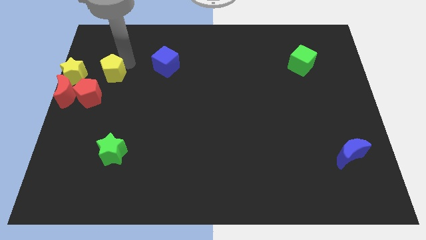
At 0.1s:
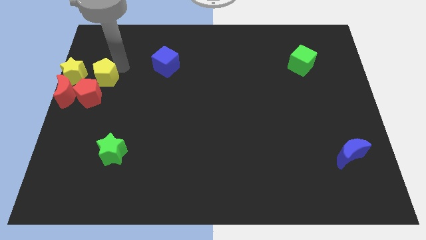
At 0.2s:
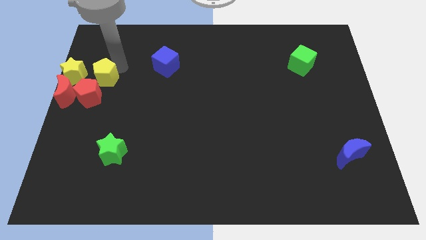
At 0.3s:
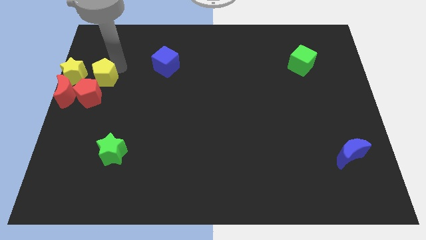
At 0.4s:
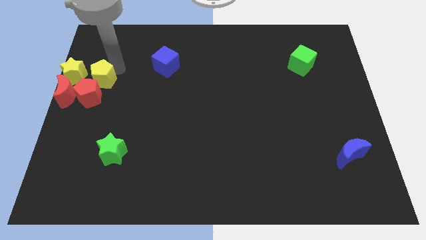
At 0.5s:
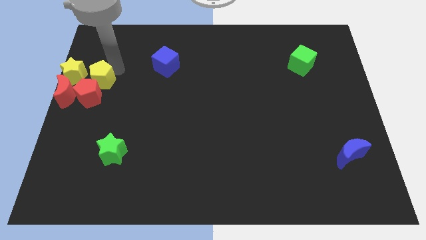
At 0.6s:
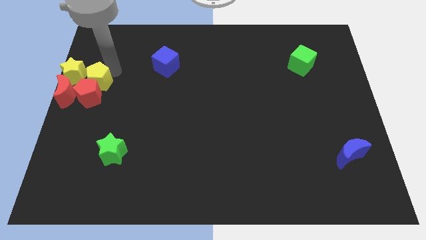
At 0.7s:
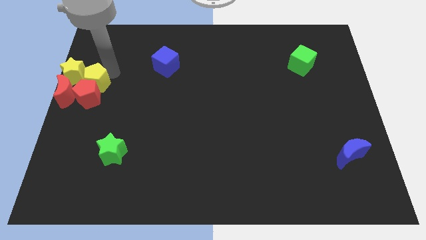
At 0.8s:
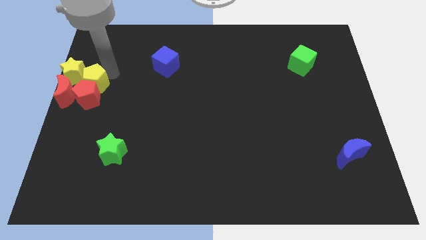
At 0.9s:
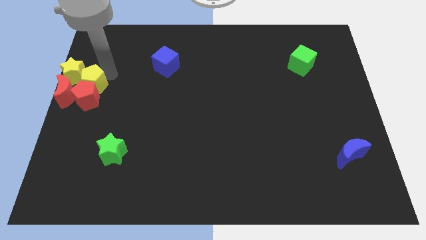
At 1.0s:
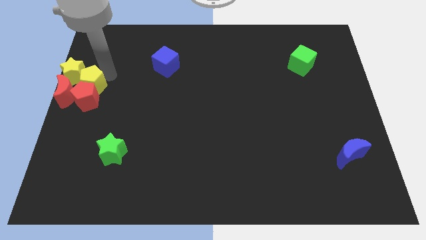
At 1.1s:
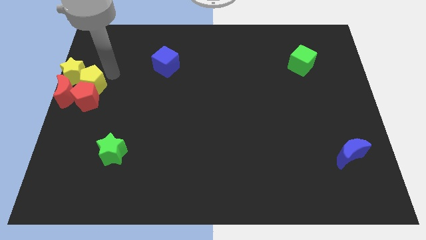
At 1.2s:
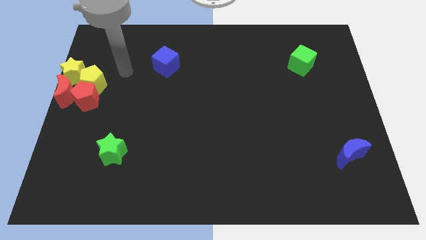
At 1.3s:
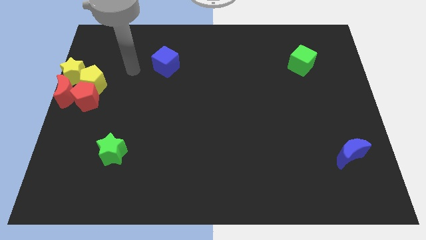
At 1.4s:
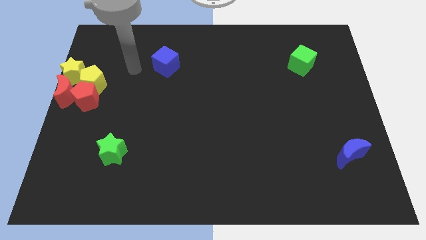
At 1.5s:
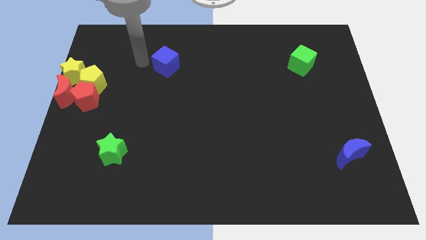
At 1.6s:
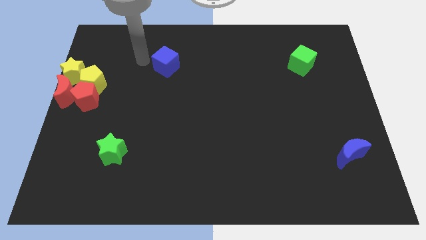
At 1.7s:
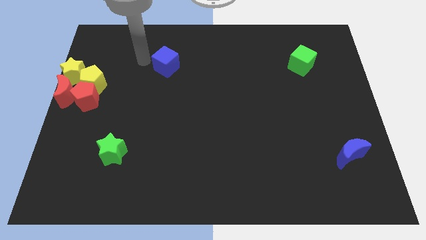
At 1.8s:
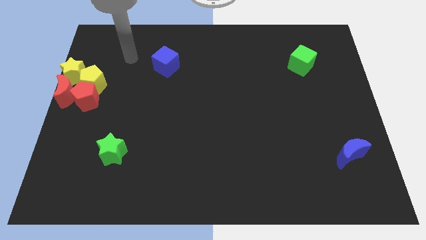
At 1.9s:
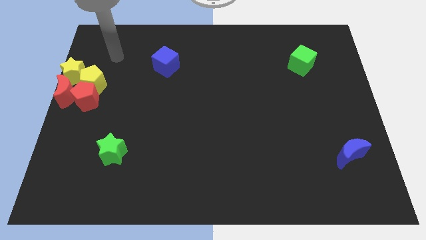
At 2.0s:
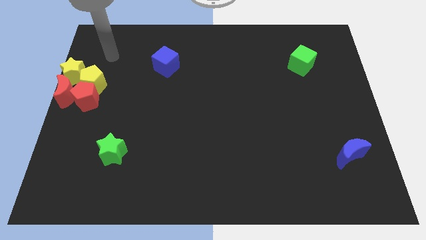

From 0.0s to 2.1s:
move the yellow pentagon towards the top of the red pentagon

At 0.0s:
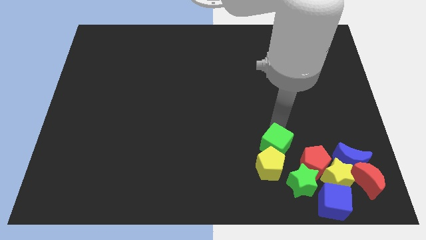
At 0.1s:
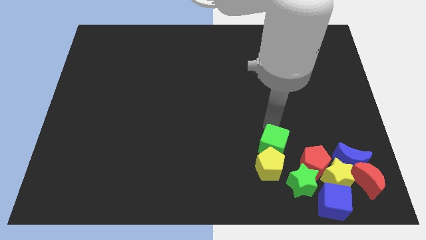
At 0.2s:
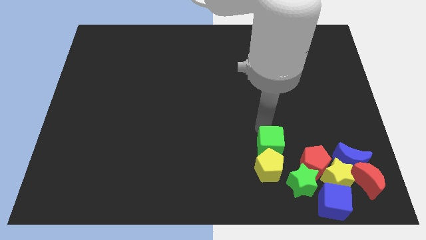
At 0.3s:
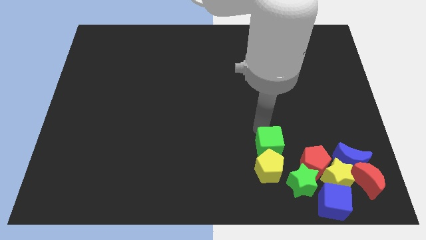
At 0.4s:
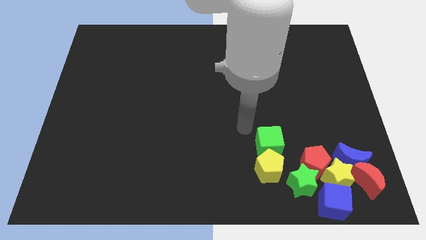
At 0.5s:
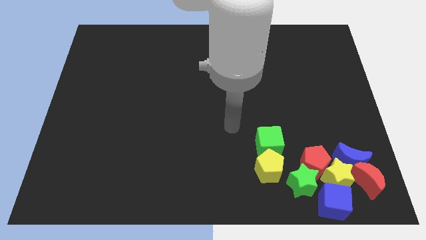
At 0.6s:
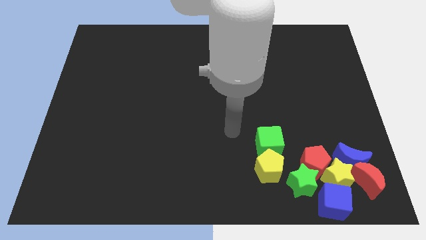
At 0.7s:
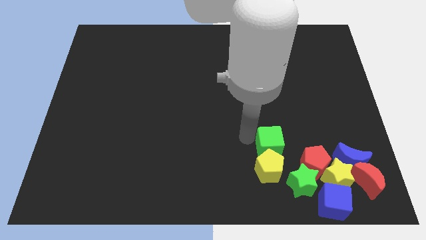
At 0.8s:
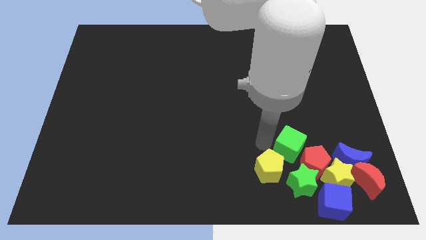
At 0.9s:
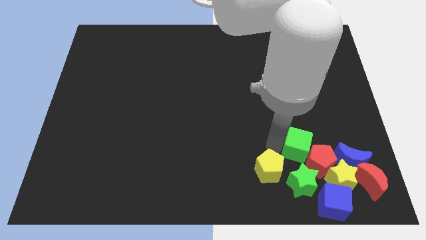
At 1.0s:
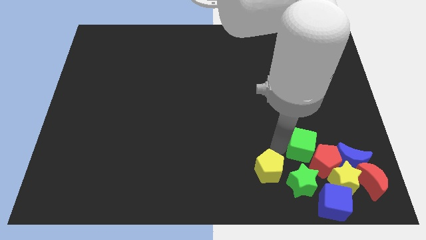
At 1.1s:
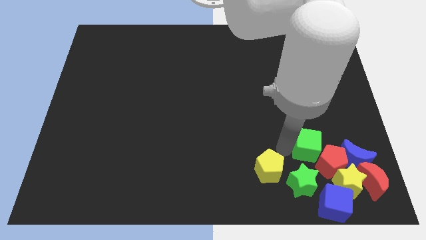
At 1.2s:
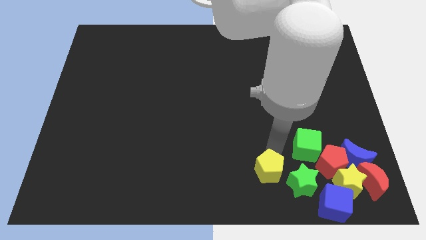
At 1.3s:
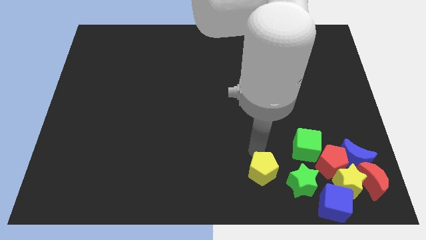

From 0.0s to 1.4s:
move the green cube to the right

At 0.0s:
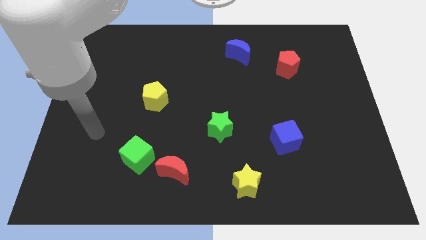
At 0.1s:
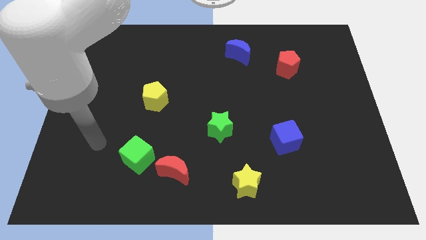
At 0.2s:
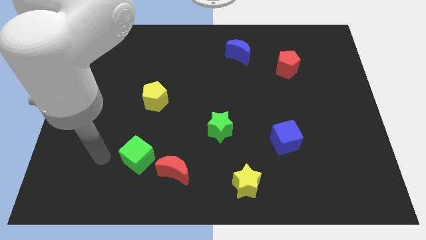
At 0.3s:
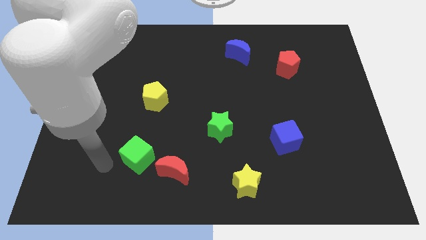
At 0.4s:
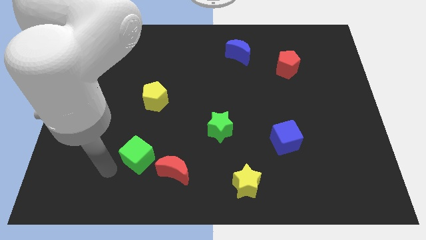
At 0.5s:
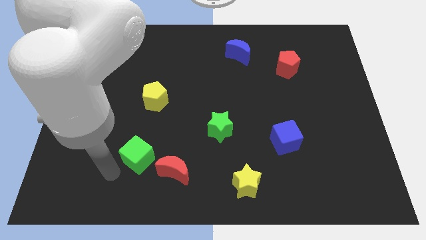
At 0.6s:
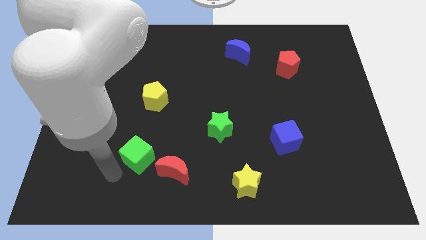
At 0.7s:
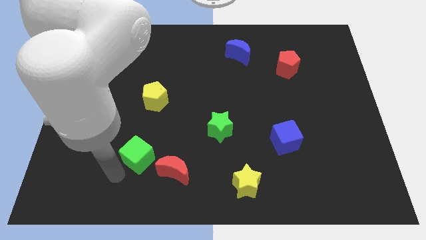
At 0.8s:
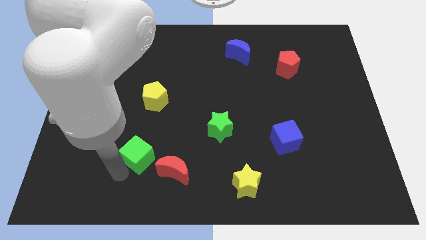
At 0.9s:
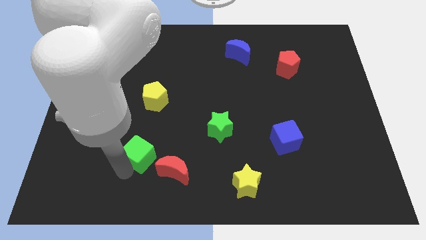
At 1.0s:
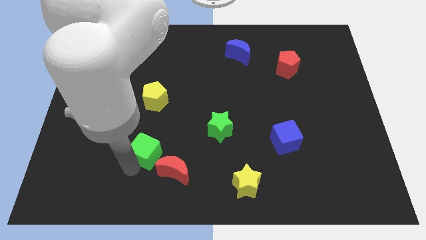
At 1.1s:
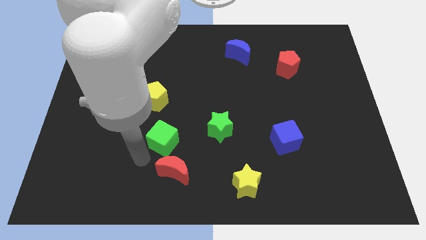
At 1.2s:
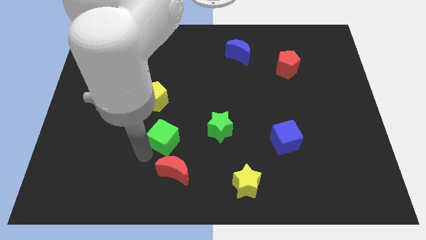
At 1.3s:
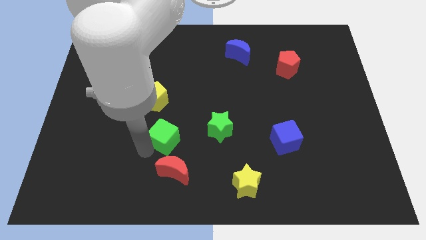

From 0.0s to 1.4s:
place green cube in between yellow pentagon and red moon

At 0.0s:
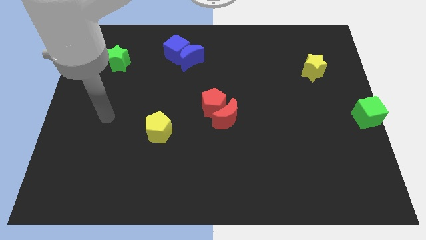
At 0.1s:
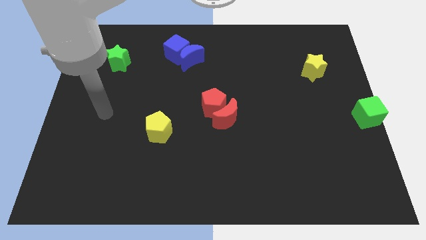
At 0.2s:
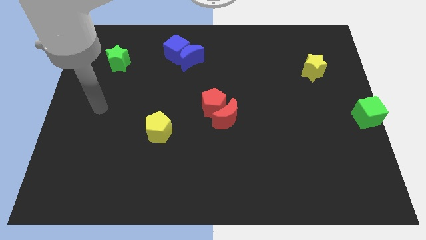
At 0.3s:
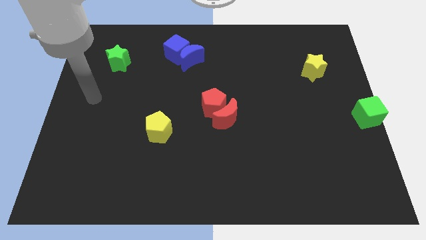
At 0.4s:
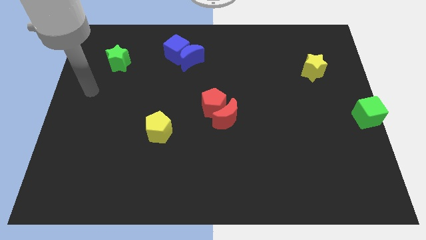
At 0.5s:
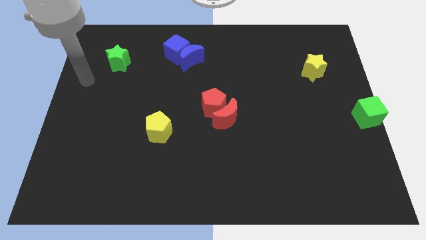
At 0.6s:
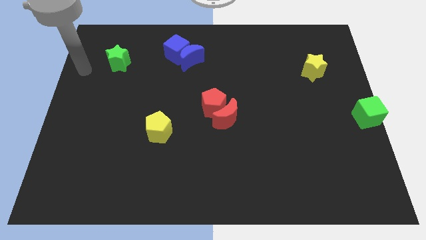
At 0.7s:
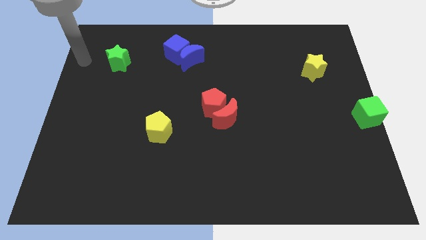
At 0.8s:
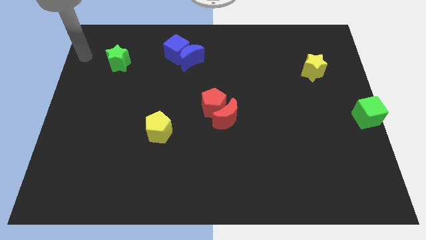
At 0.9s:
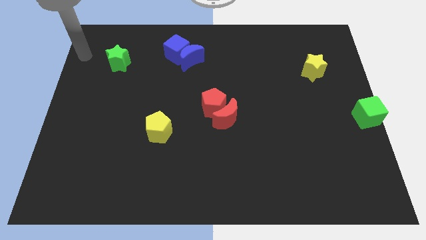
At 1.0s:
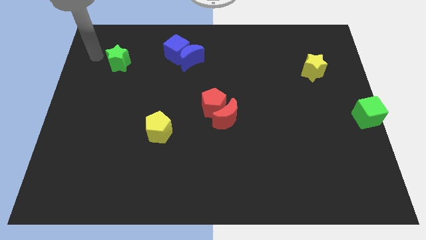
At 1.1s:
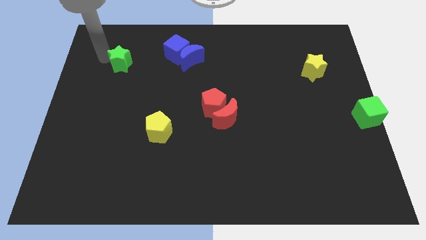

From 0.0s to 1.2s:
put your hand parallel left to the green star

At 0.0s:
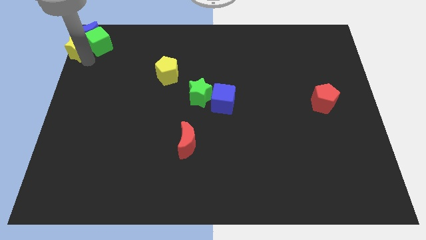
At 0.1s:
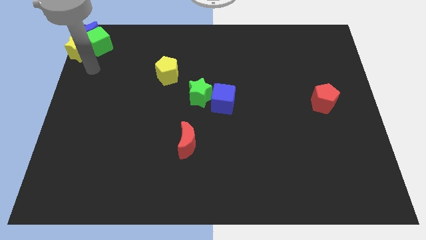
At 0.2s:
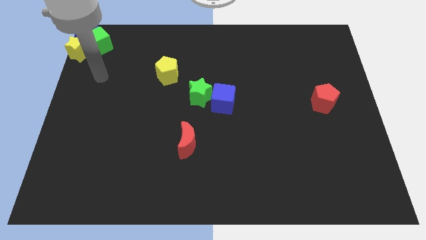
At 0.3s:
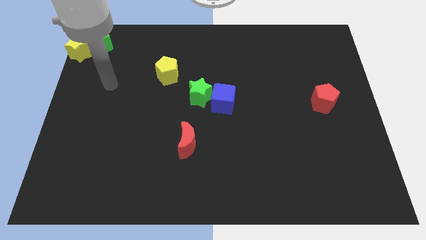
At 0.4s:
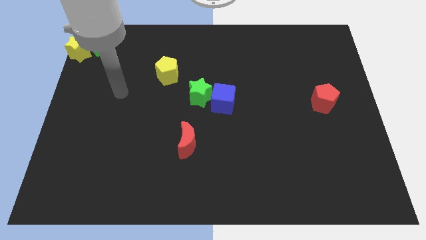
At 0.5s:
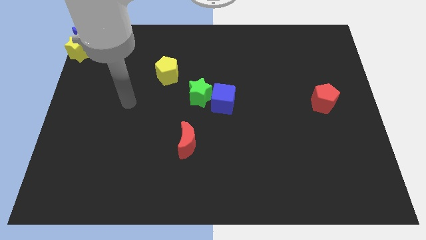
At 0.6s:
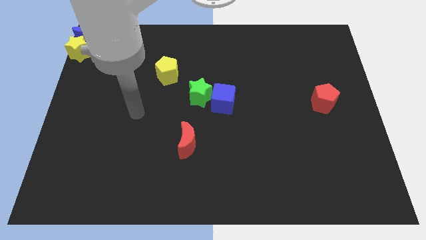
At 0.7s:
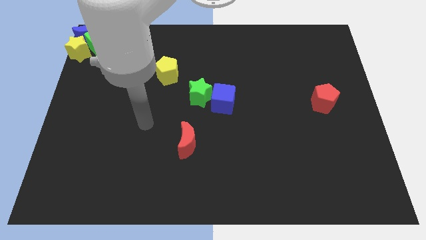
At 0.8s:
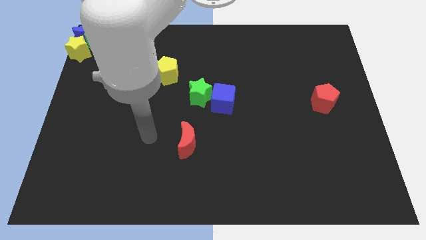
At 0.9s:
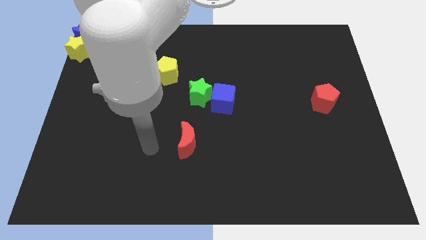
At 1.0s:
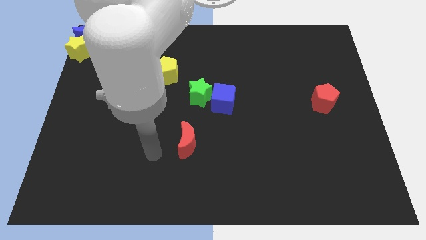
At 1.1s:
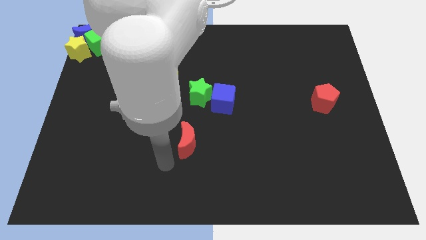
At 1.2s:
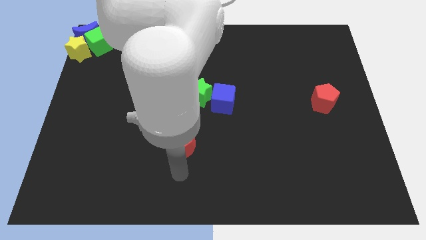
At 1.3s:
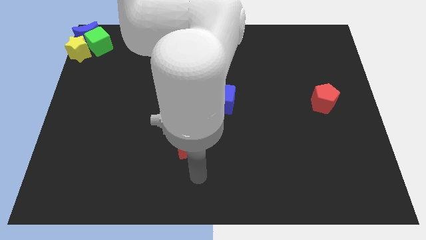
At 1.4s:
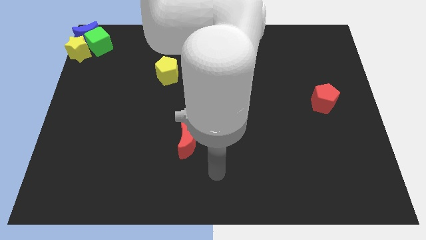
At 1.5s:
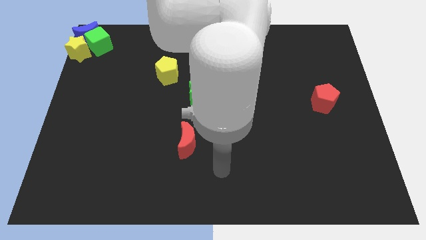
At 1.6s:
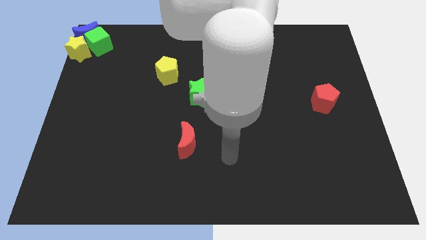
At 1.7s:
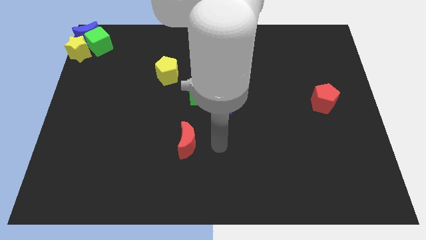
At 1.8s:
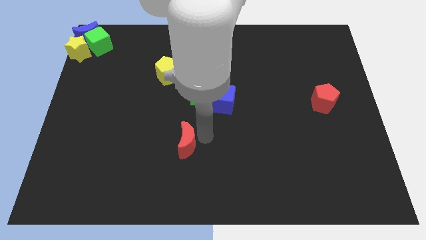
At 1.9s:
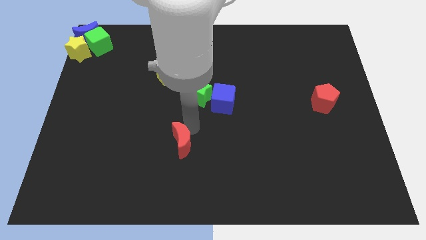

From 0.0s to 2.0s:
point your arm to the right of red moon

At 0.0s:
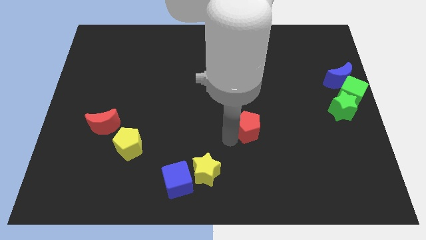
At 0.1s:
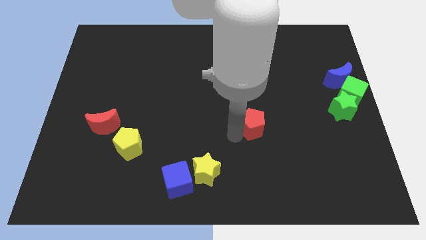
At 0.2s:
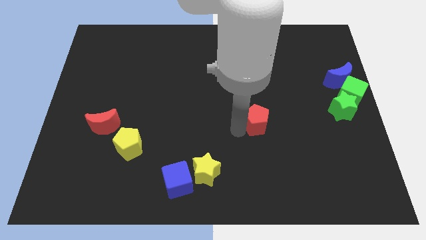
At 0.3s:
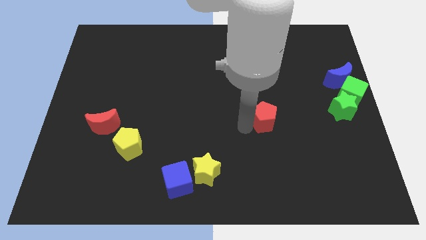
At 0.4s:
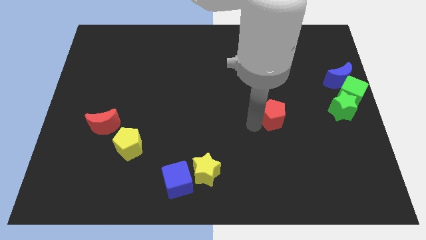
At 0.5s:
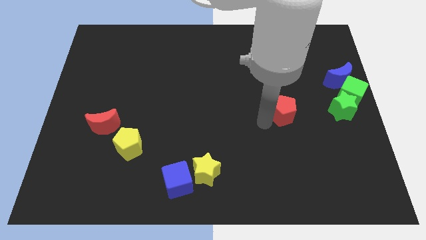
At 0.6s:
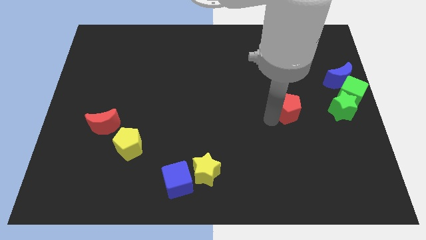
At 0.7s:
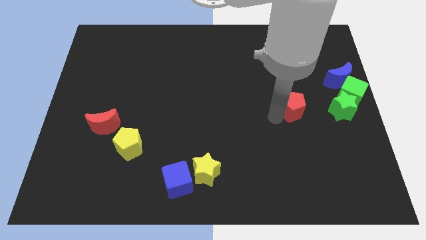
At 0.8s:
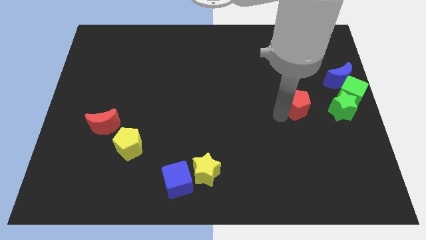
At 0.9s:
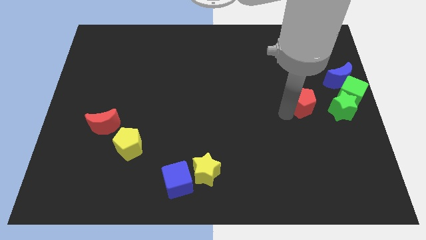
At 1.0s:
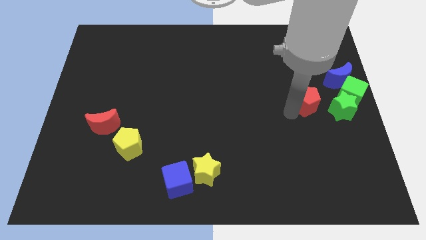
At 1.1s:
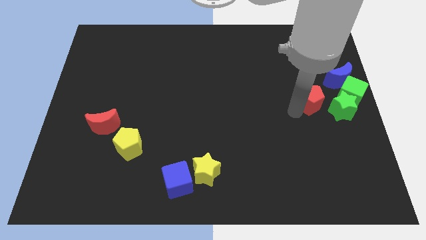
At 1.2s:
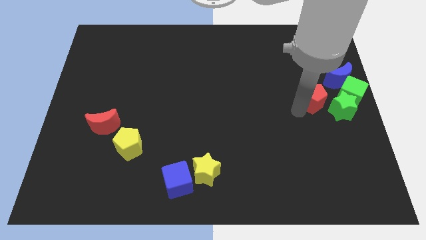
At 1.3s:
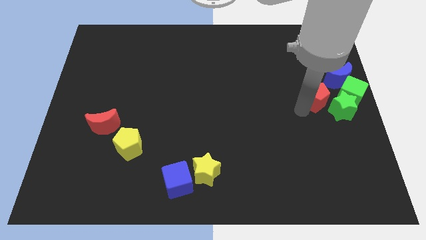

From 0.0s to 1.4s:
move the red pentagon to the blue crescent
